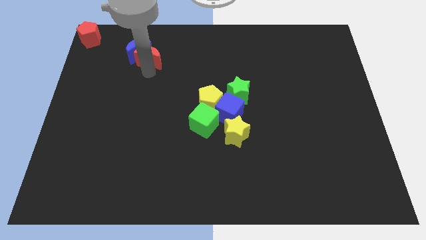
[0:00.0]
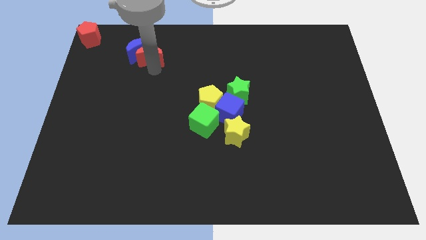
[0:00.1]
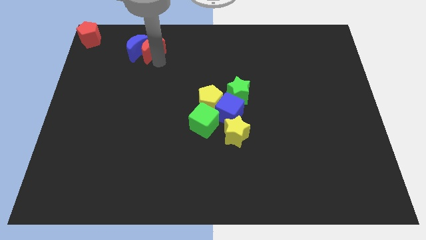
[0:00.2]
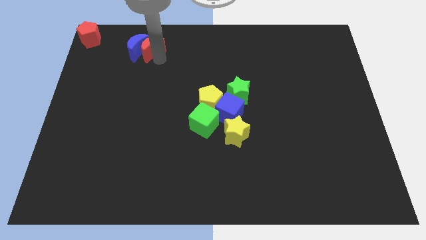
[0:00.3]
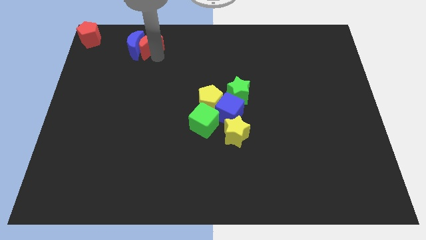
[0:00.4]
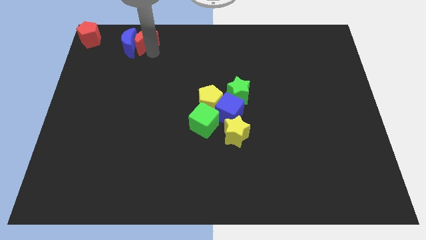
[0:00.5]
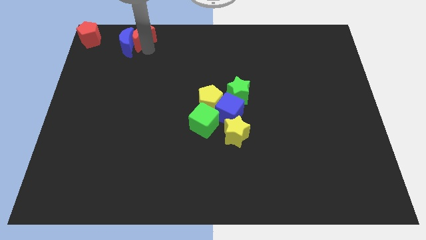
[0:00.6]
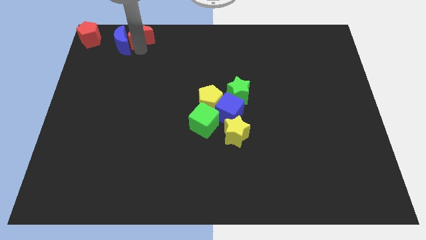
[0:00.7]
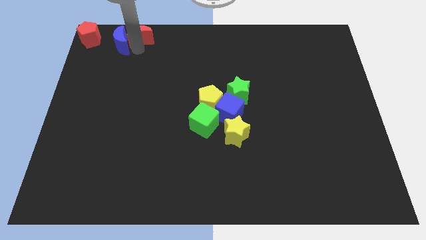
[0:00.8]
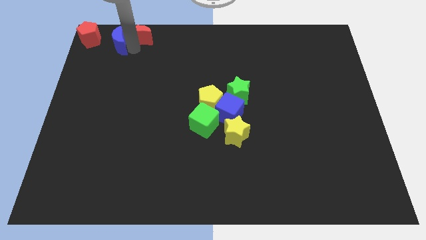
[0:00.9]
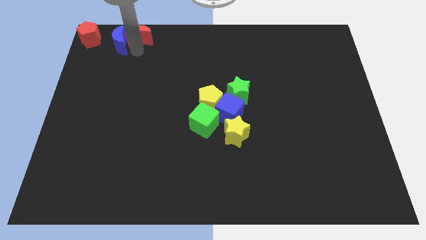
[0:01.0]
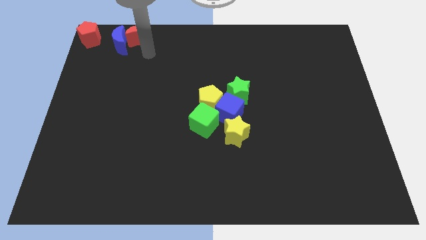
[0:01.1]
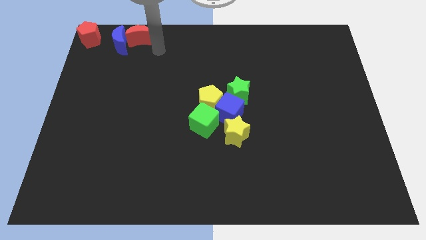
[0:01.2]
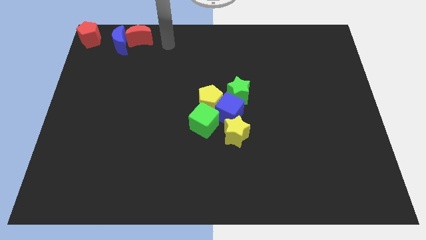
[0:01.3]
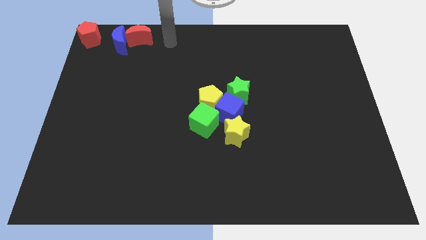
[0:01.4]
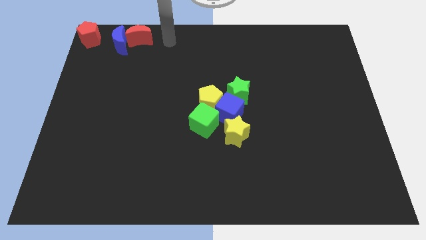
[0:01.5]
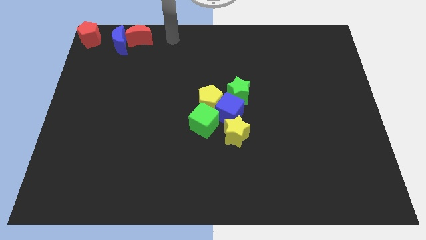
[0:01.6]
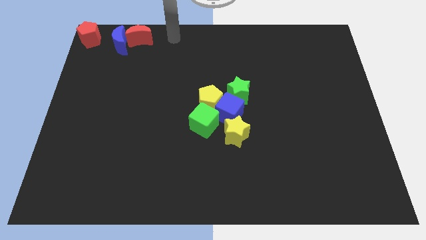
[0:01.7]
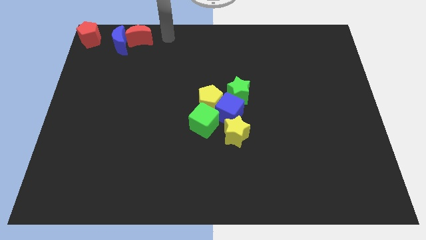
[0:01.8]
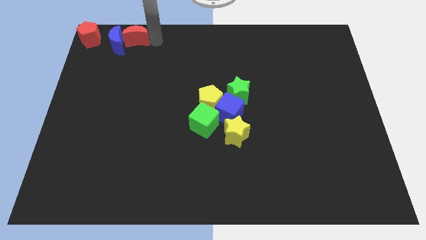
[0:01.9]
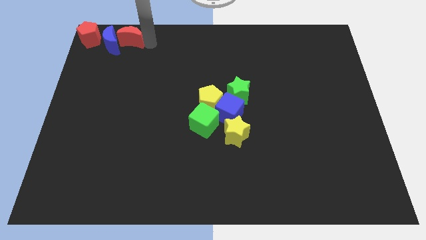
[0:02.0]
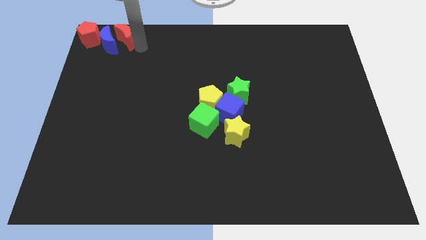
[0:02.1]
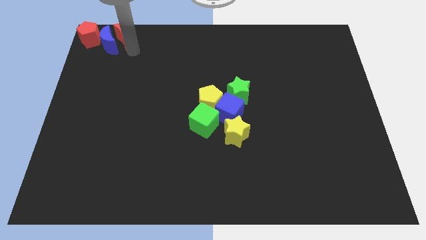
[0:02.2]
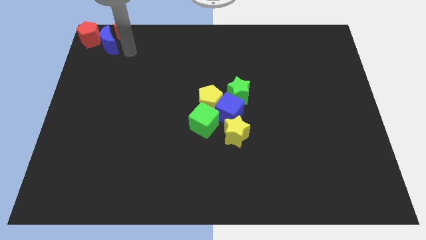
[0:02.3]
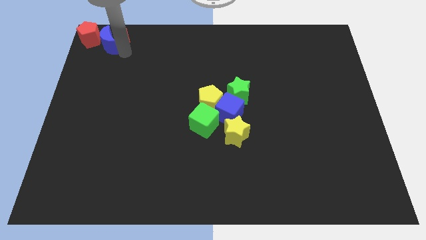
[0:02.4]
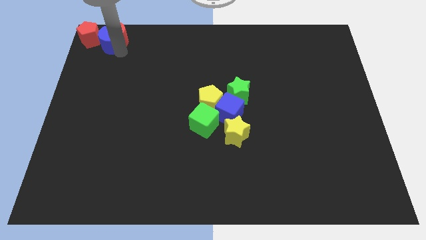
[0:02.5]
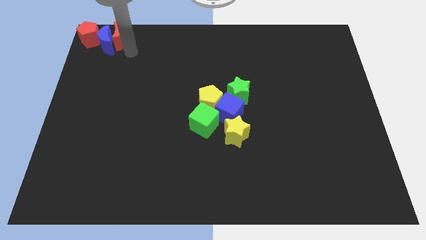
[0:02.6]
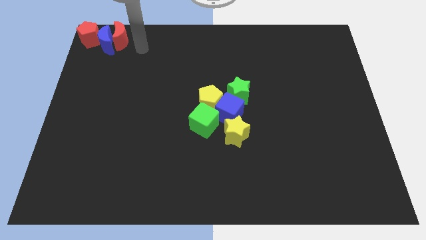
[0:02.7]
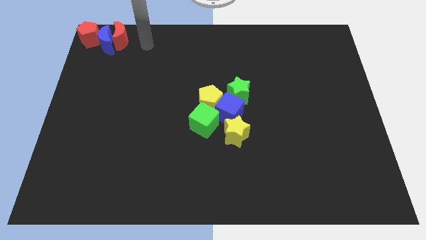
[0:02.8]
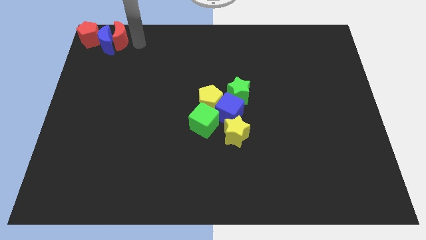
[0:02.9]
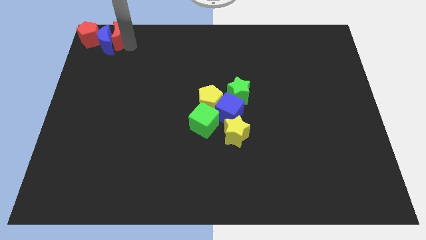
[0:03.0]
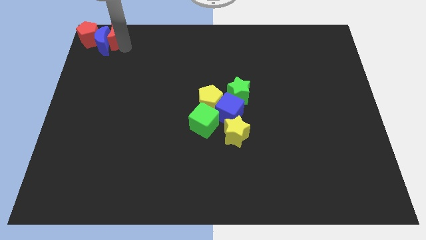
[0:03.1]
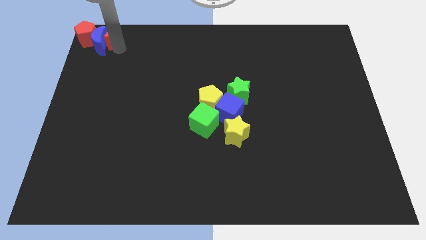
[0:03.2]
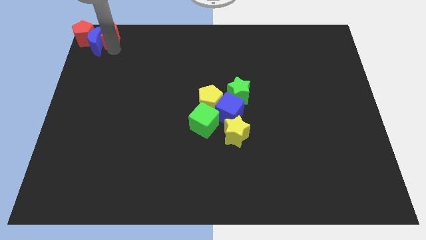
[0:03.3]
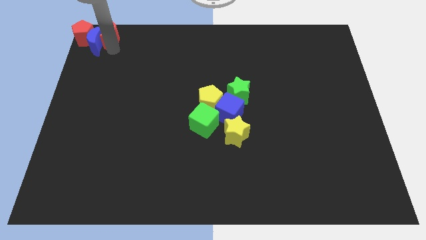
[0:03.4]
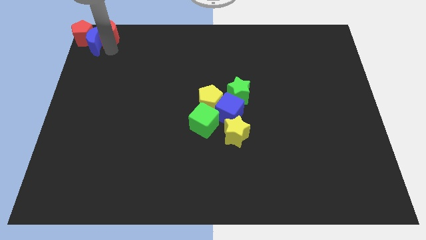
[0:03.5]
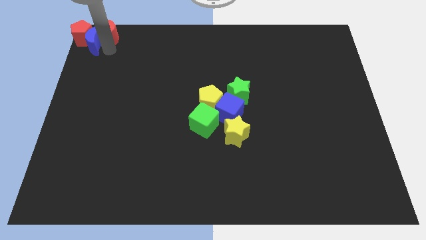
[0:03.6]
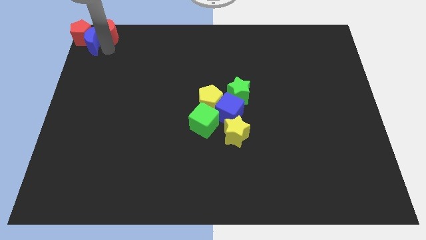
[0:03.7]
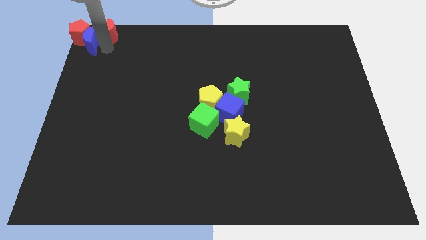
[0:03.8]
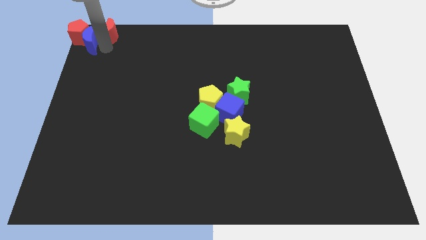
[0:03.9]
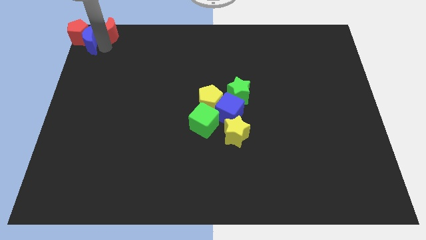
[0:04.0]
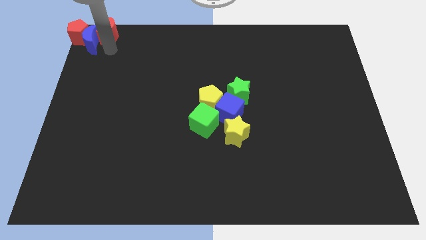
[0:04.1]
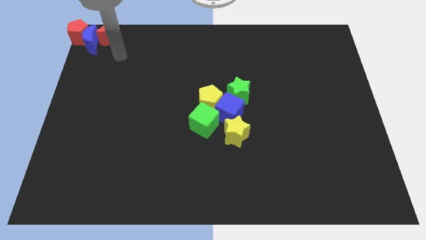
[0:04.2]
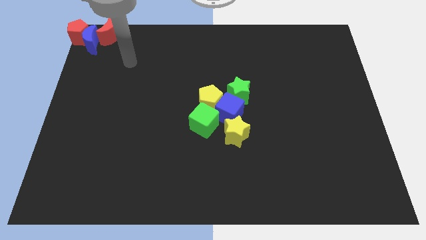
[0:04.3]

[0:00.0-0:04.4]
push the red crescent into the red pentagon along with blue crescent

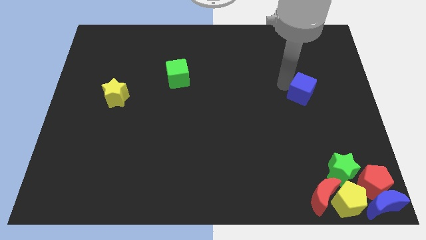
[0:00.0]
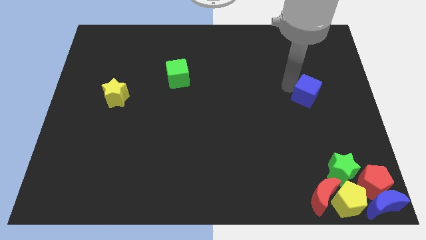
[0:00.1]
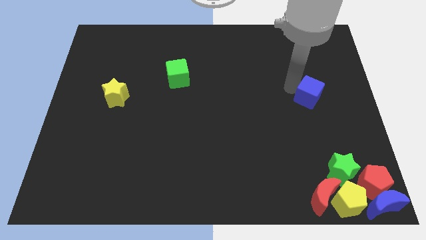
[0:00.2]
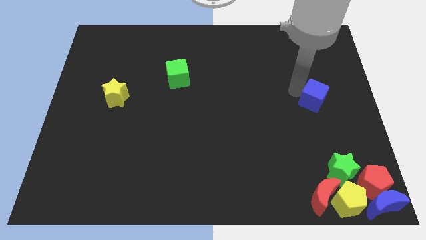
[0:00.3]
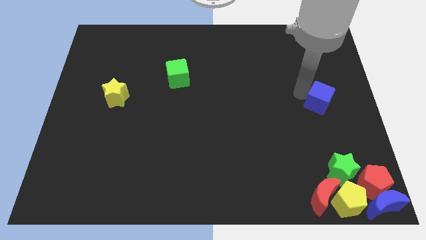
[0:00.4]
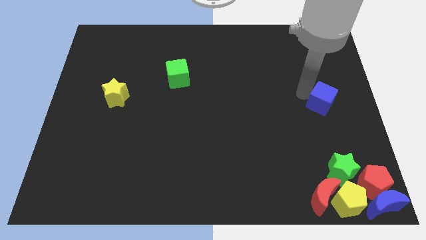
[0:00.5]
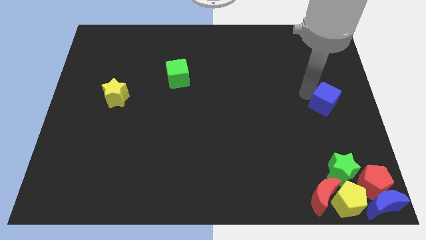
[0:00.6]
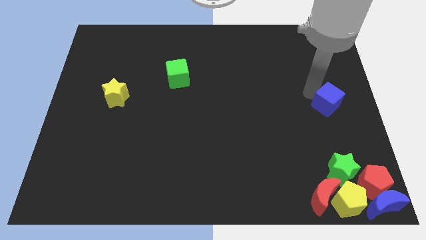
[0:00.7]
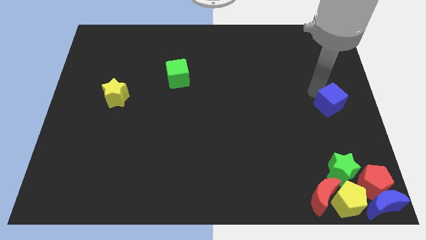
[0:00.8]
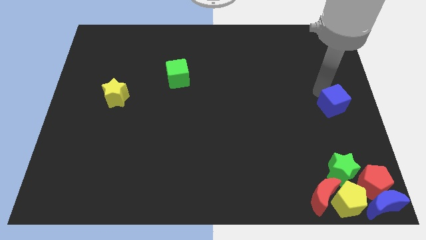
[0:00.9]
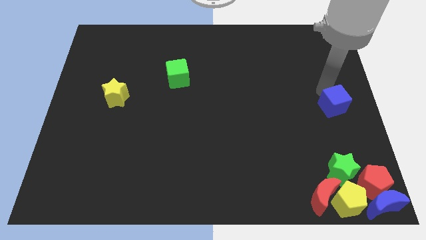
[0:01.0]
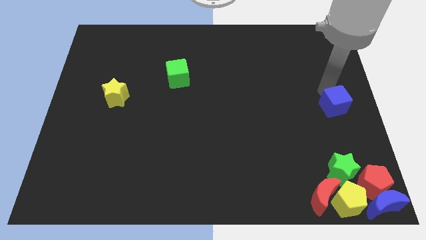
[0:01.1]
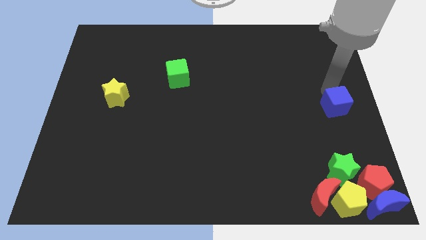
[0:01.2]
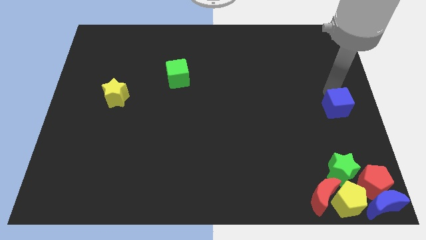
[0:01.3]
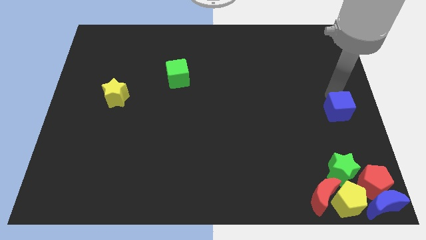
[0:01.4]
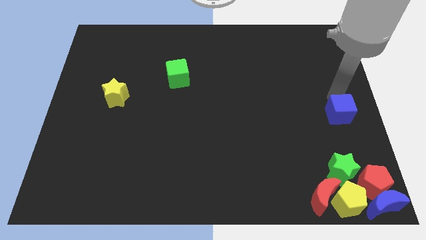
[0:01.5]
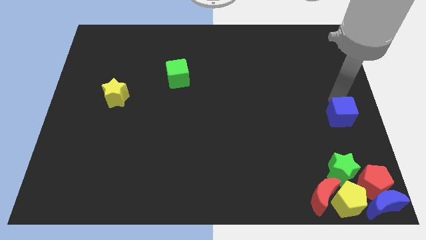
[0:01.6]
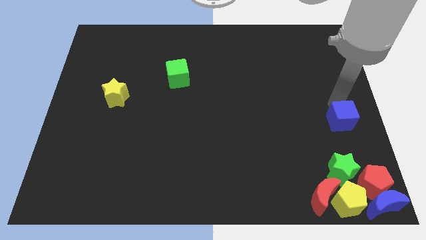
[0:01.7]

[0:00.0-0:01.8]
place the blue cube near to the green star

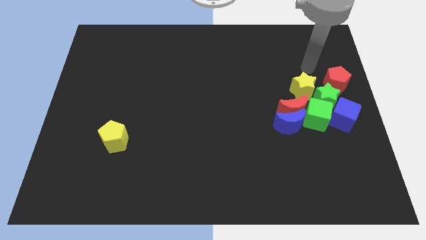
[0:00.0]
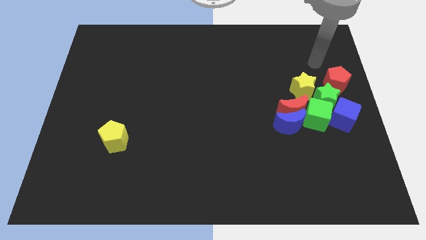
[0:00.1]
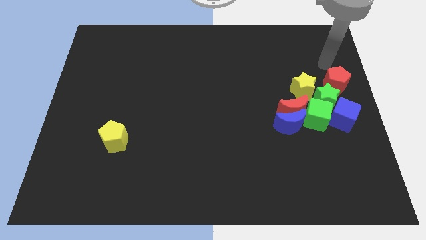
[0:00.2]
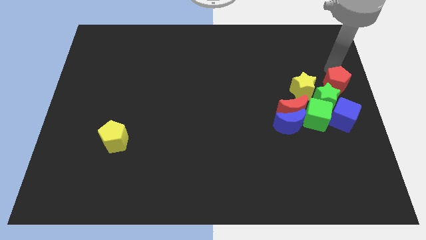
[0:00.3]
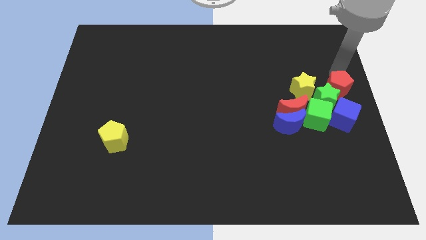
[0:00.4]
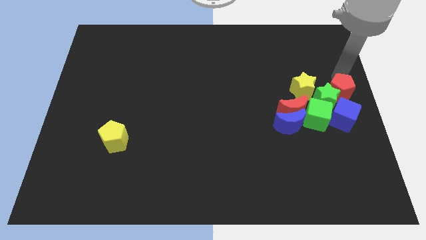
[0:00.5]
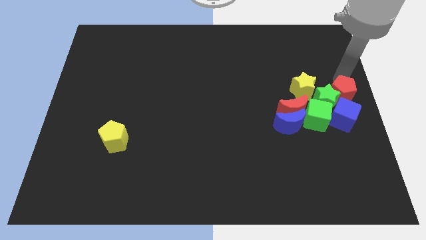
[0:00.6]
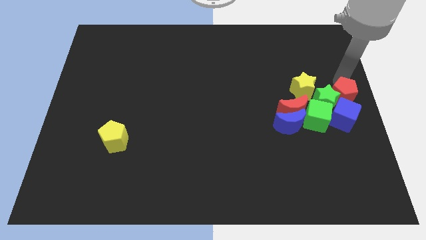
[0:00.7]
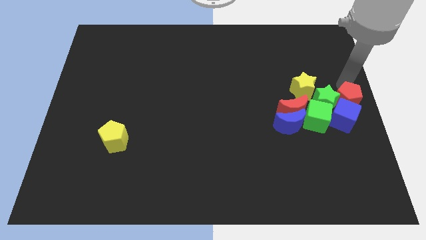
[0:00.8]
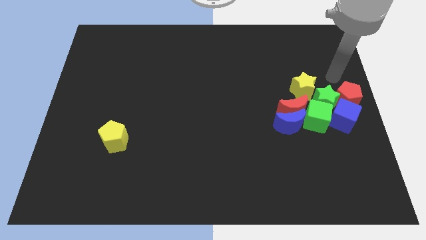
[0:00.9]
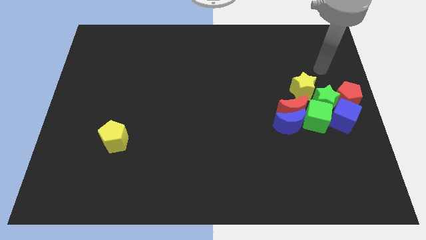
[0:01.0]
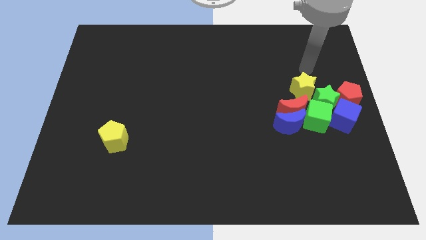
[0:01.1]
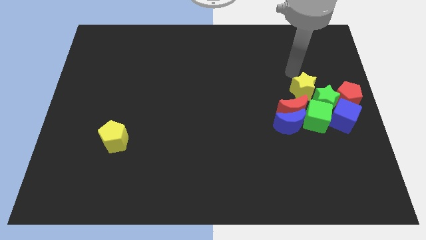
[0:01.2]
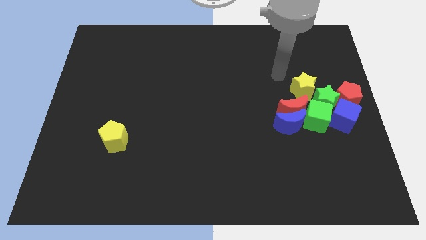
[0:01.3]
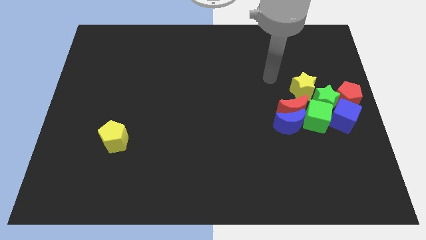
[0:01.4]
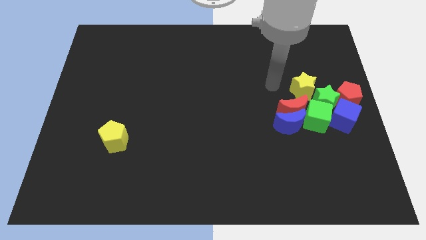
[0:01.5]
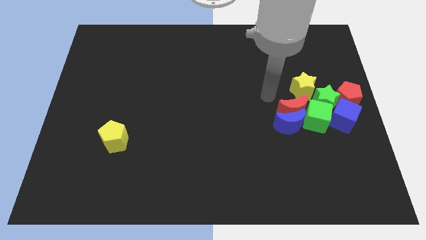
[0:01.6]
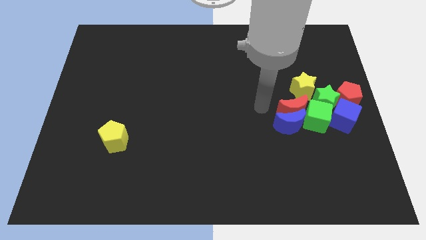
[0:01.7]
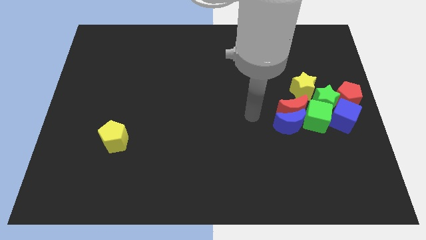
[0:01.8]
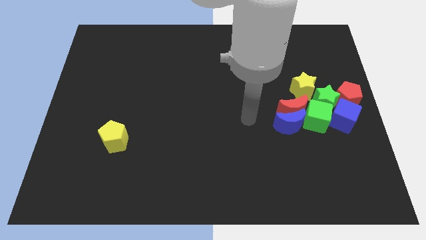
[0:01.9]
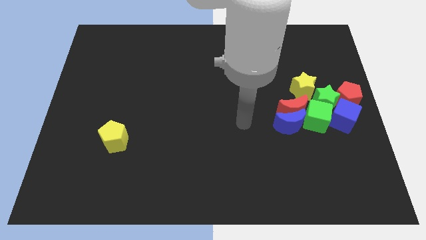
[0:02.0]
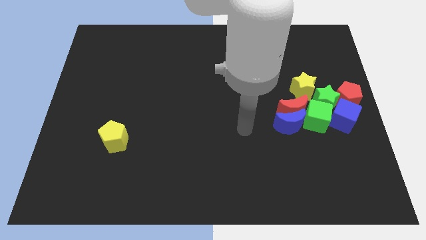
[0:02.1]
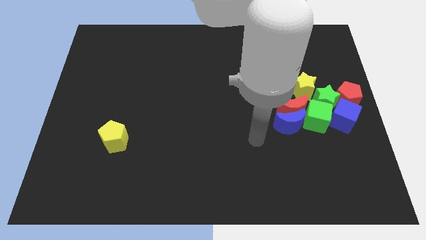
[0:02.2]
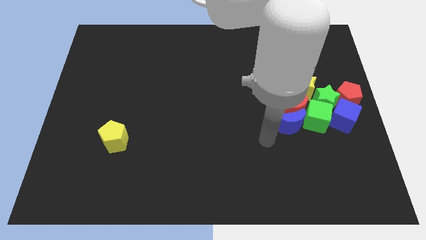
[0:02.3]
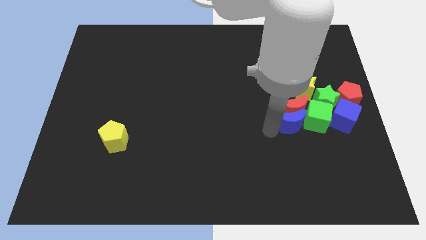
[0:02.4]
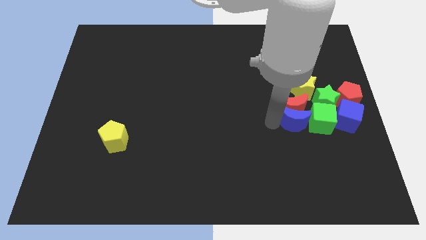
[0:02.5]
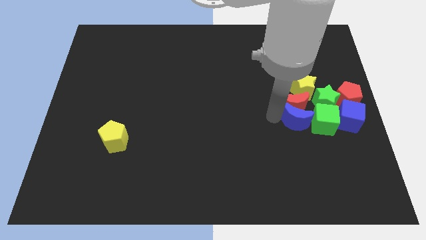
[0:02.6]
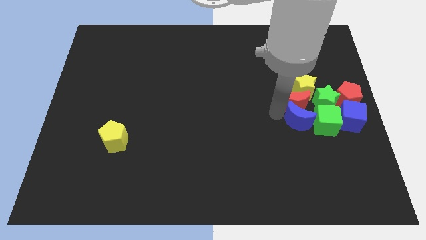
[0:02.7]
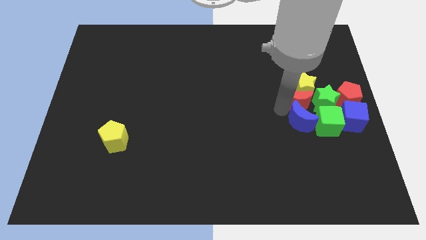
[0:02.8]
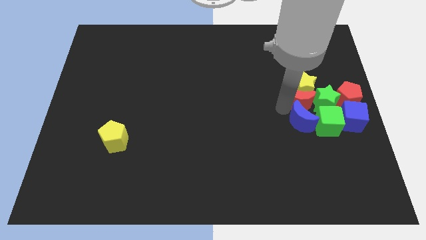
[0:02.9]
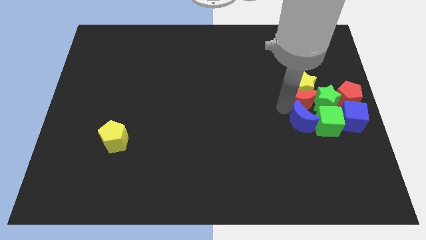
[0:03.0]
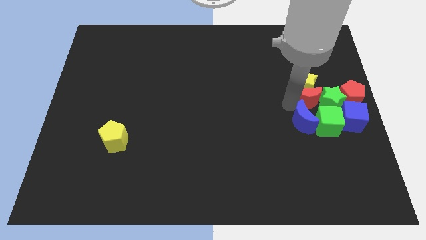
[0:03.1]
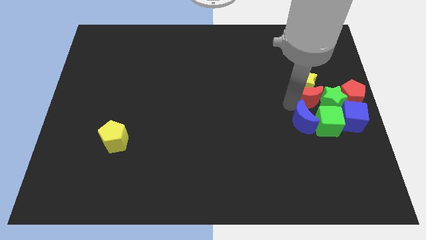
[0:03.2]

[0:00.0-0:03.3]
push green blocks blue blocks red blocks and yellow star to center right corner
